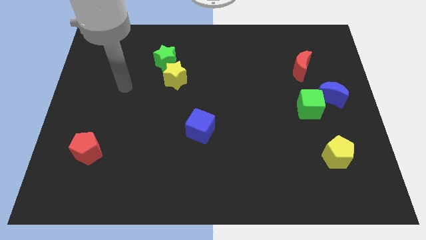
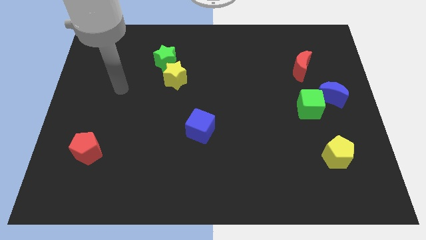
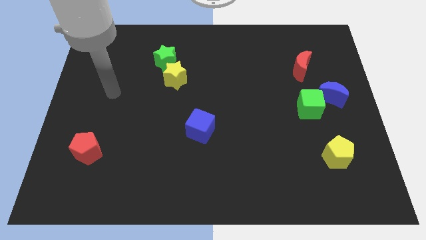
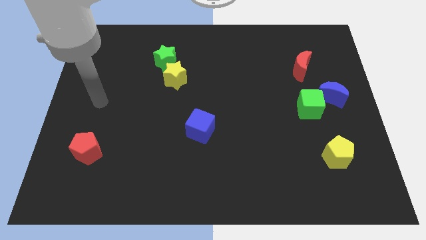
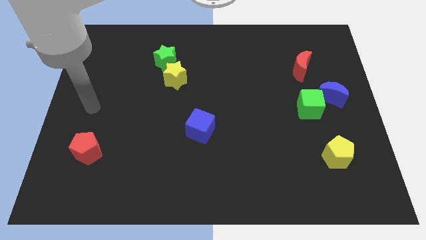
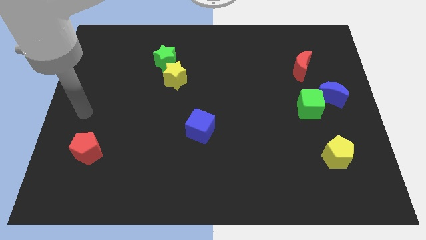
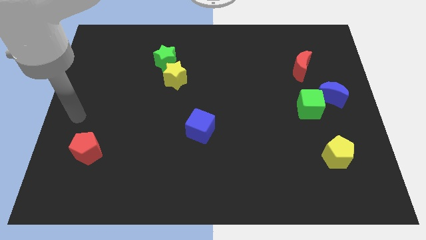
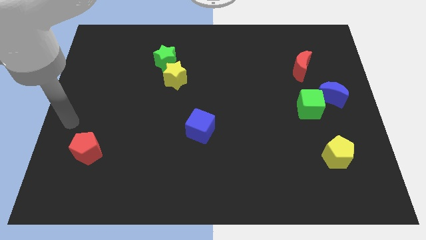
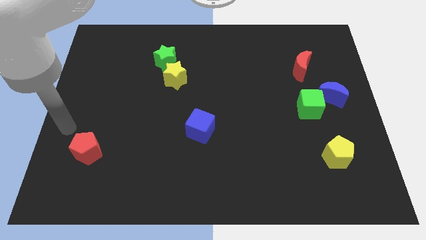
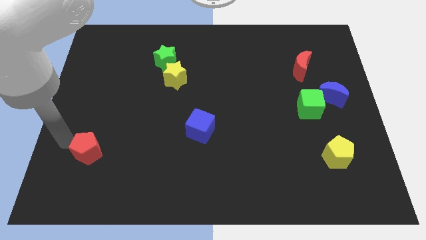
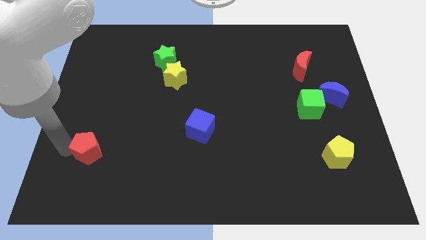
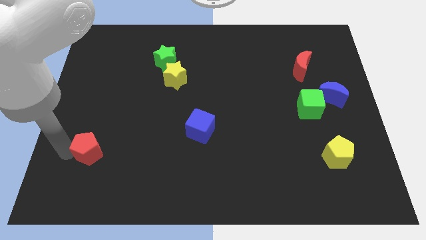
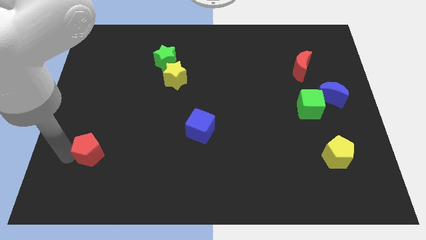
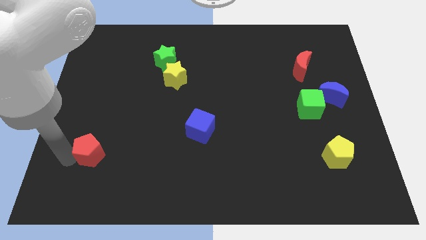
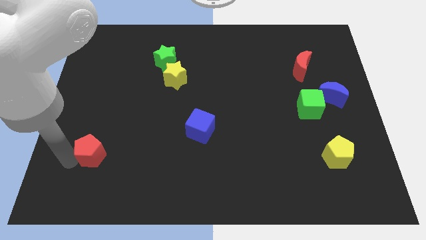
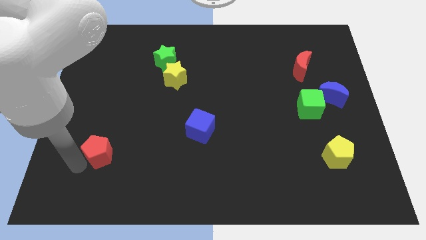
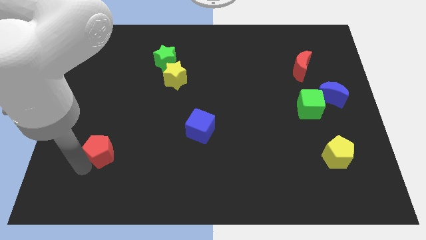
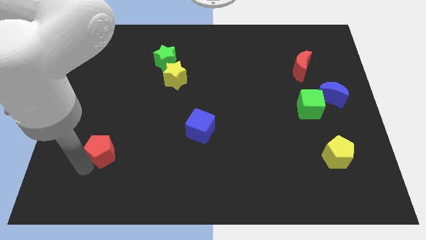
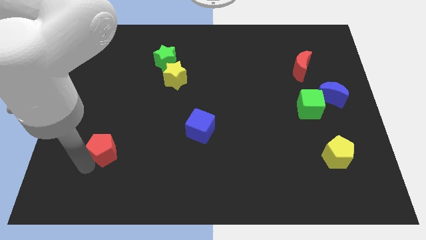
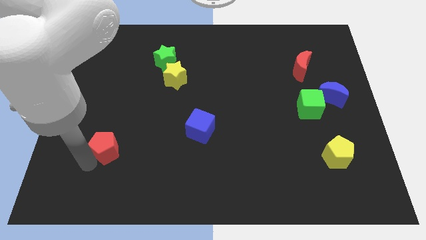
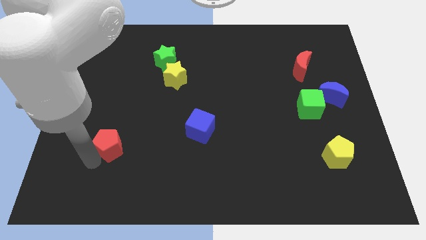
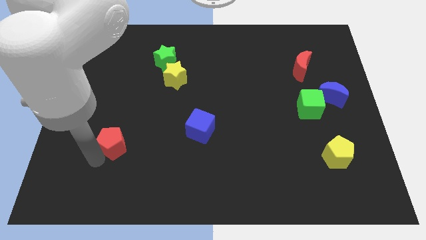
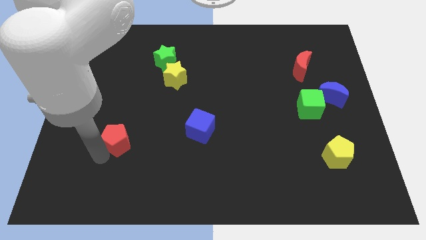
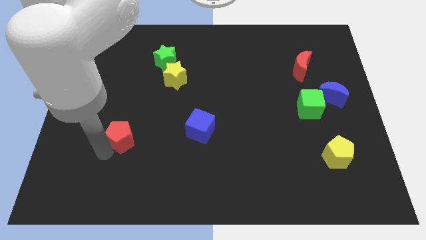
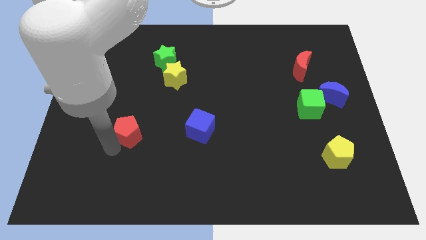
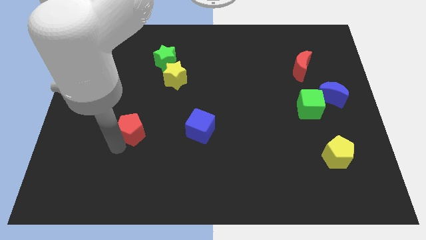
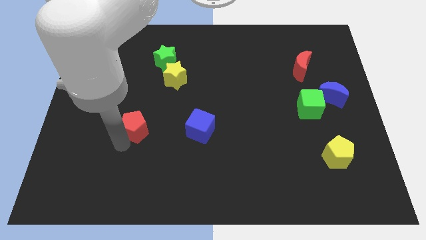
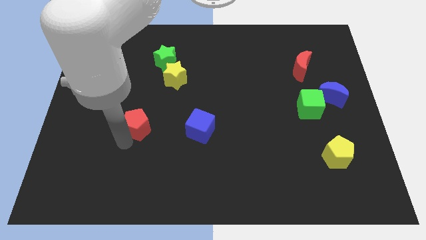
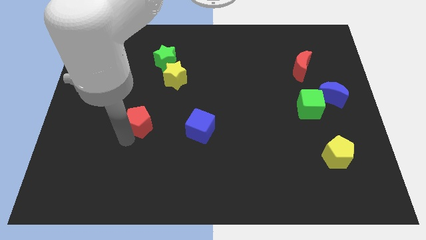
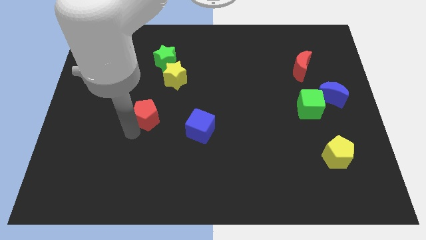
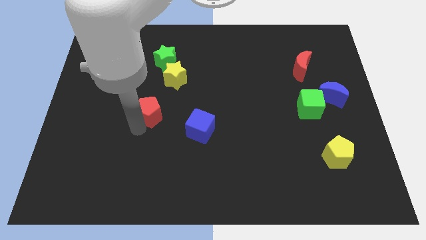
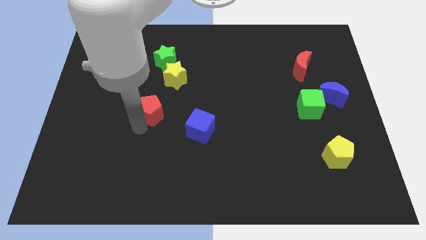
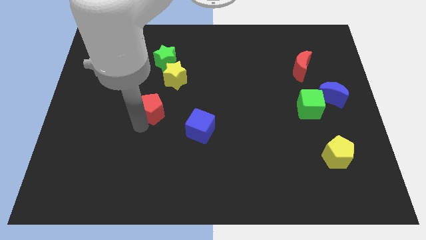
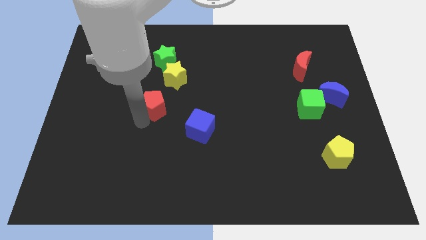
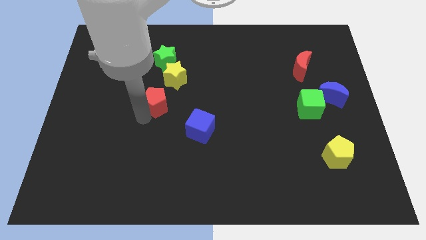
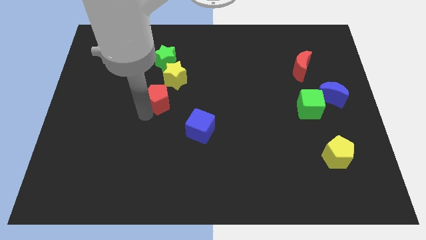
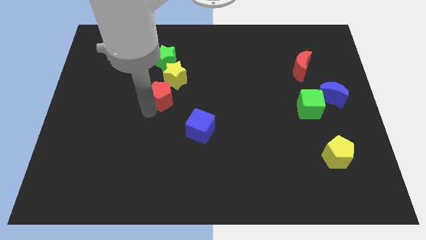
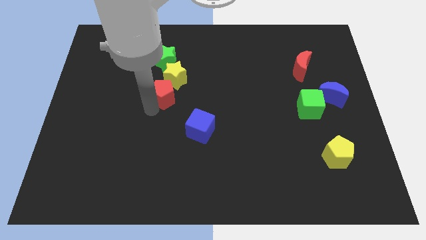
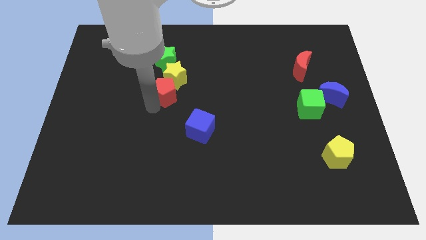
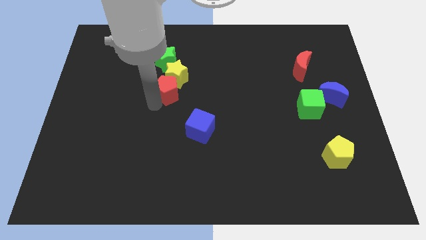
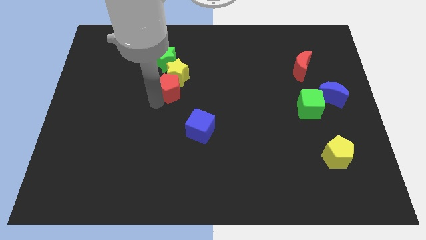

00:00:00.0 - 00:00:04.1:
slide the red pentagon next to the yellow star

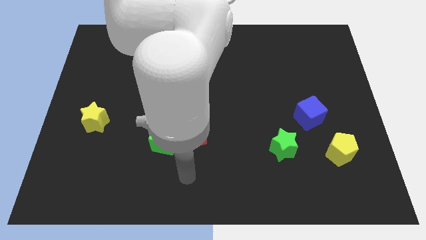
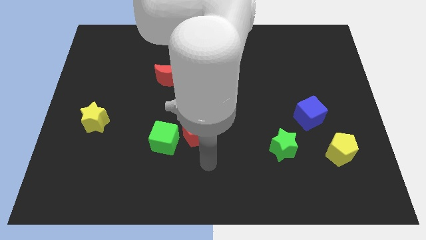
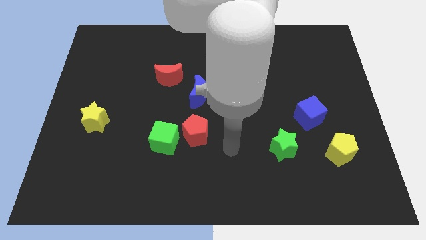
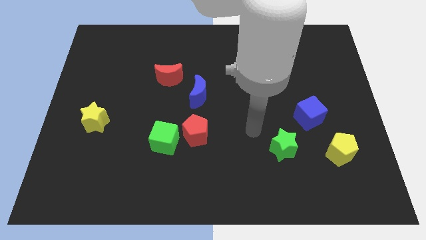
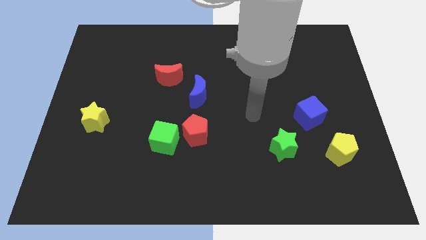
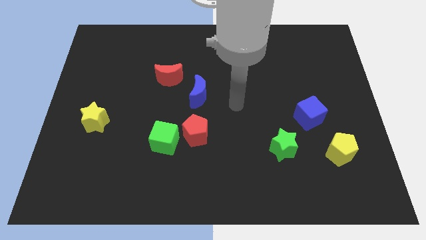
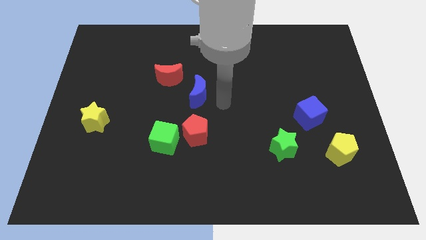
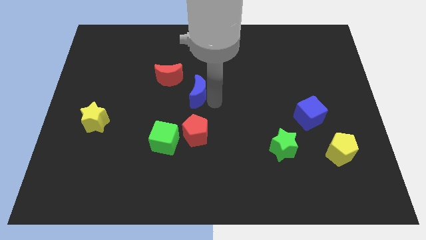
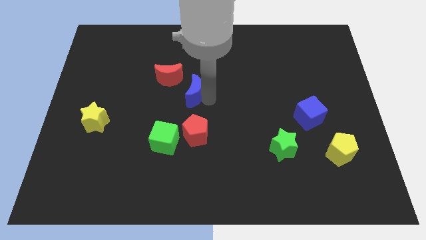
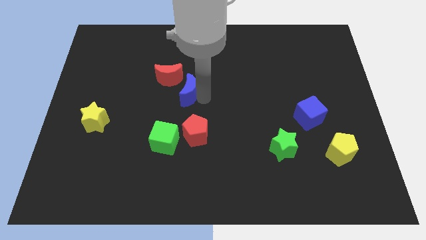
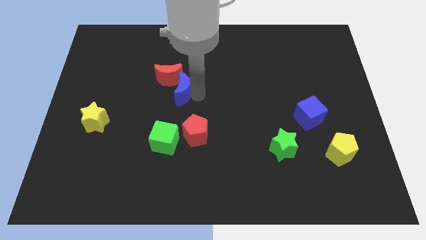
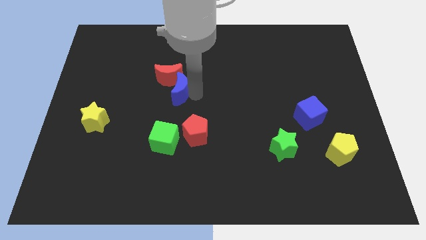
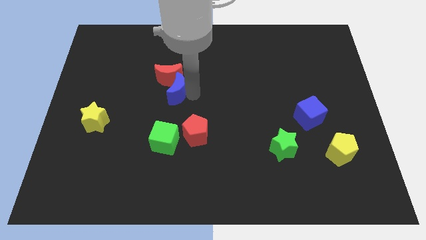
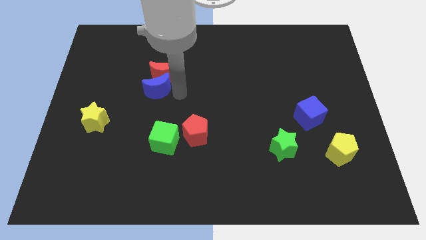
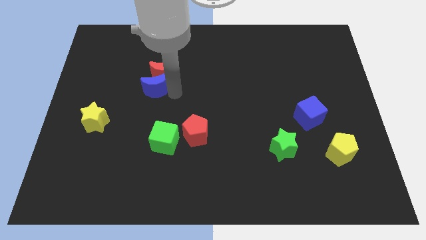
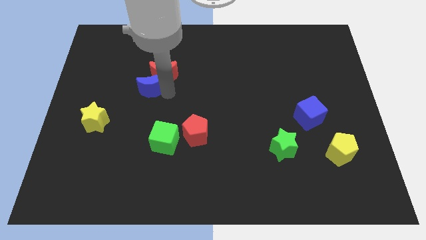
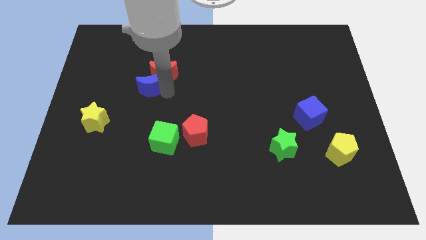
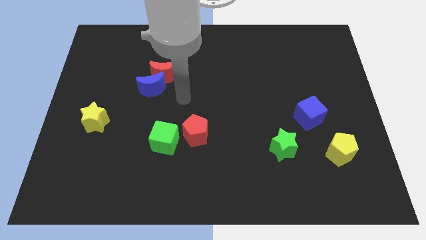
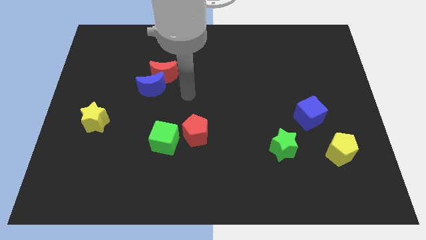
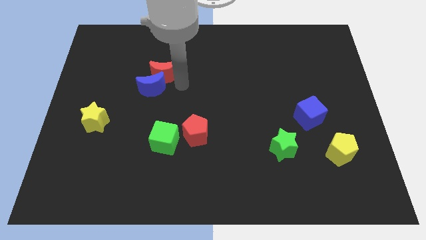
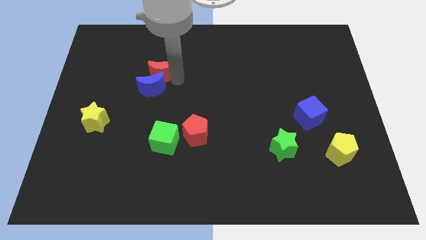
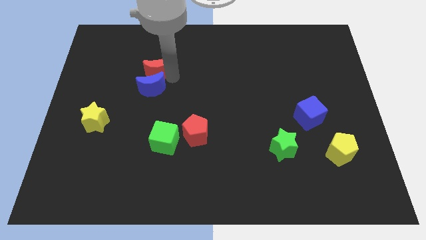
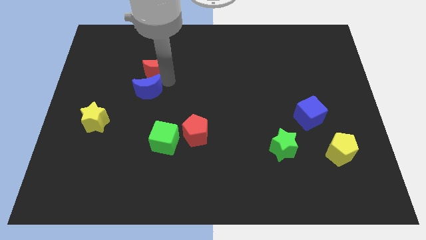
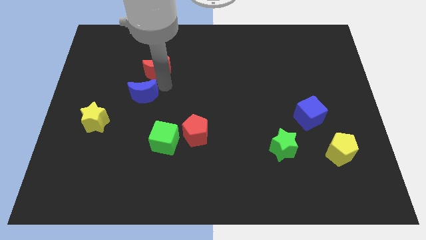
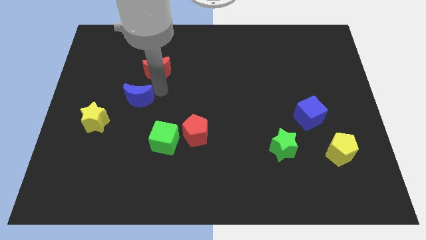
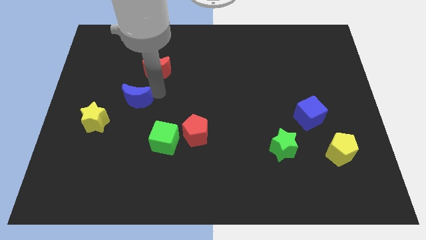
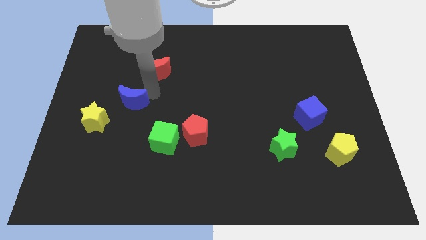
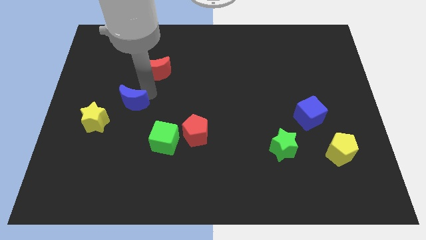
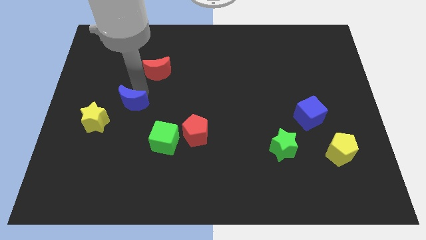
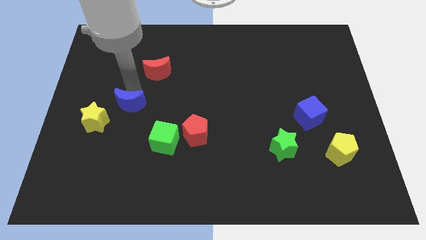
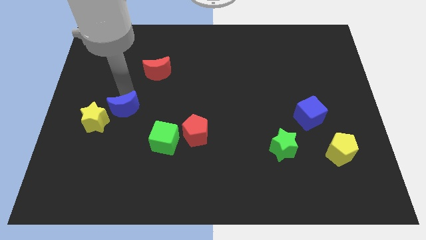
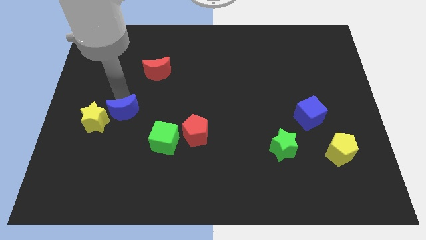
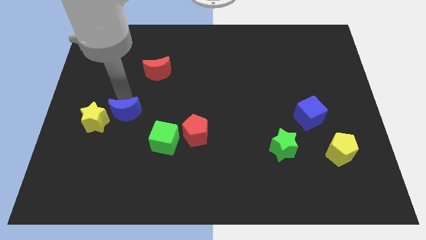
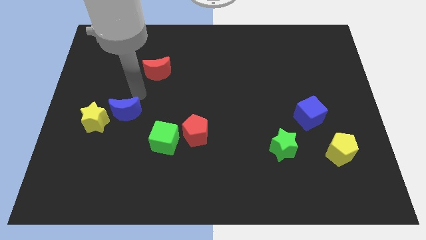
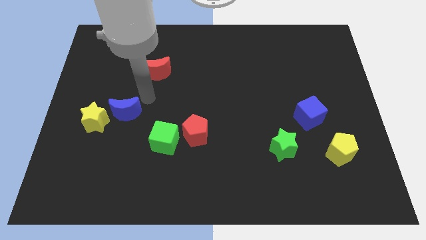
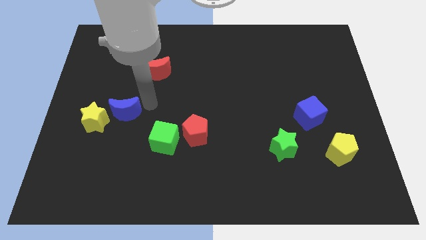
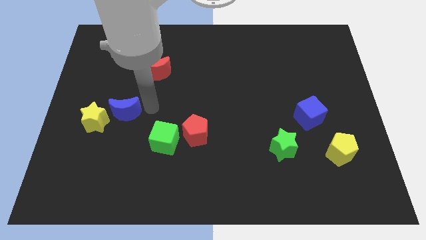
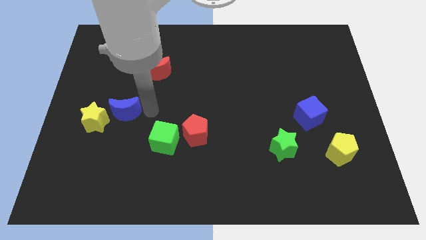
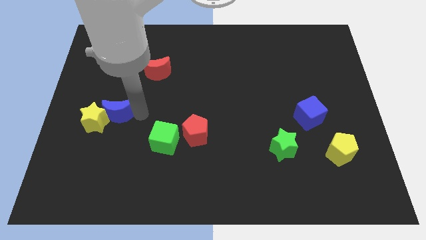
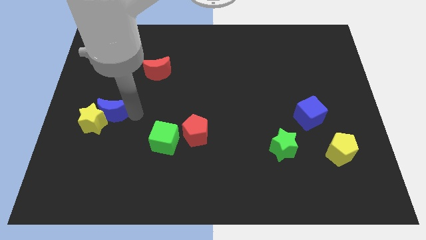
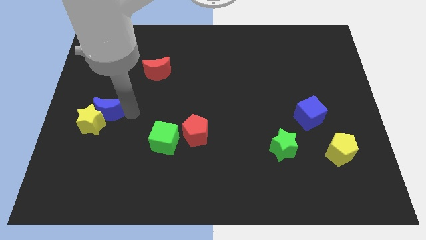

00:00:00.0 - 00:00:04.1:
move the blue moon next to the yellow star

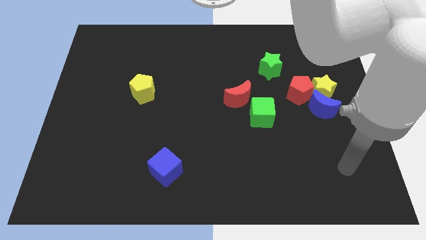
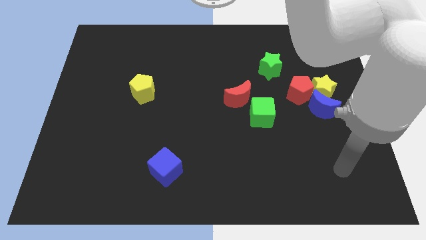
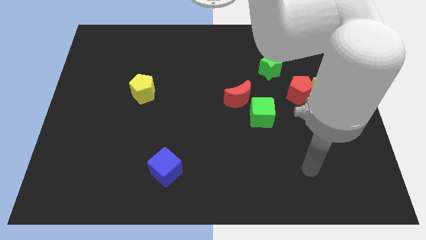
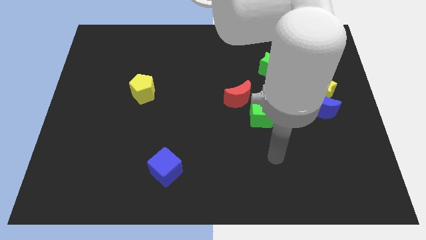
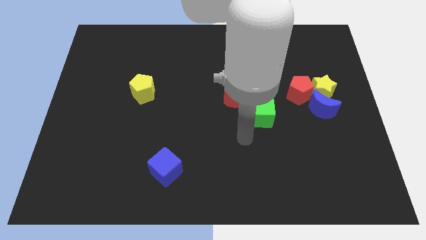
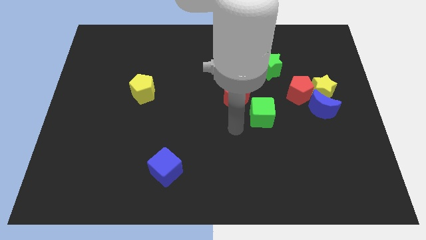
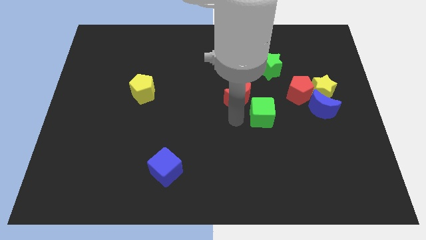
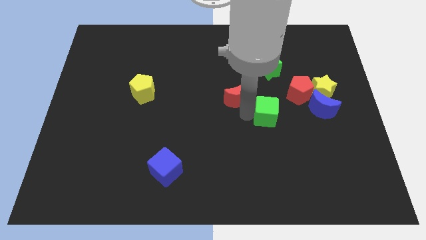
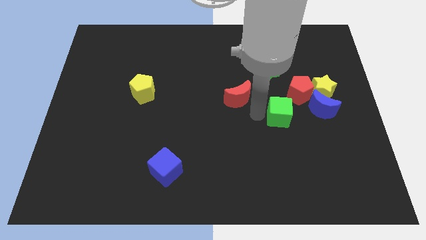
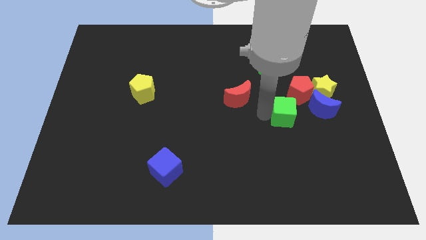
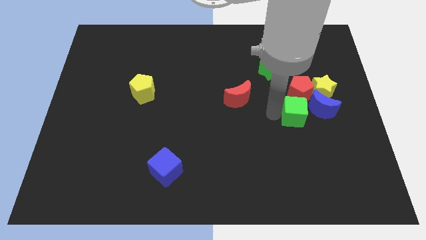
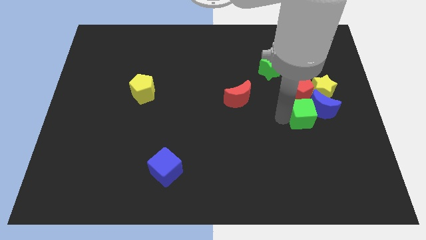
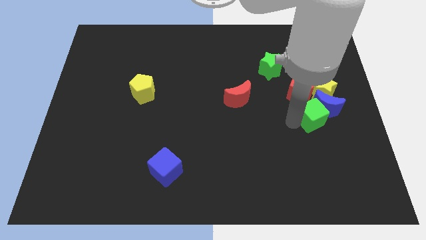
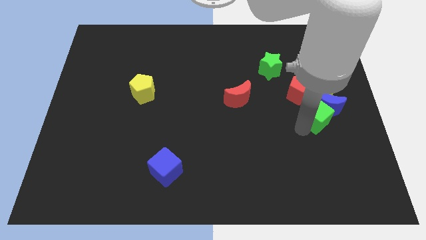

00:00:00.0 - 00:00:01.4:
move the green cube towards the blue moon
